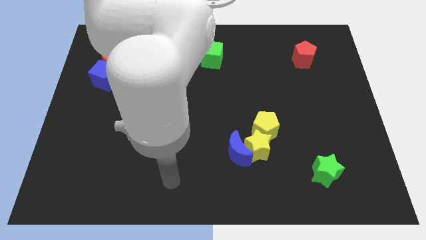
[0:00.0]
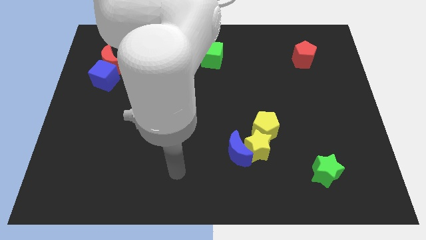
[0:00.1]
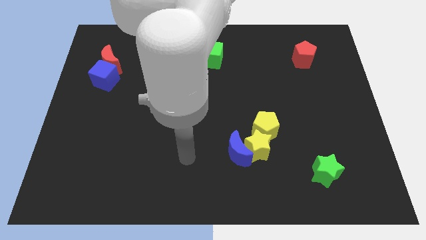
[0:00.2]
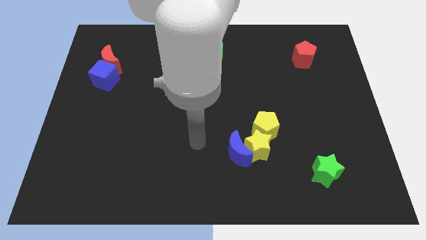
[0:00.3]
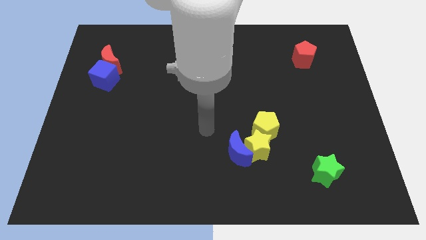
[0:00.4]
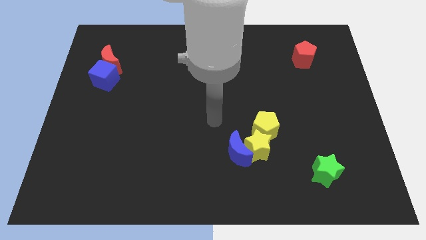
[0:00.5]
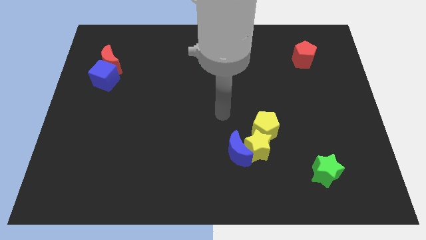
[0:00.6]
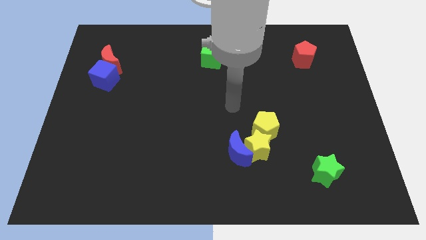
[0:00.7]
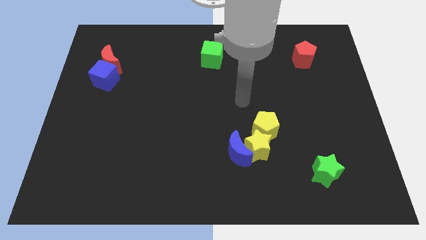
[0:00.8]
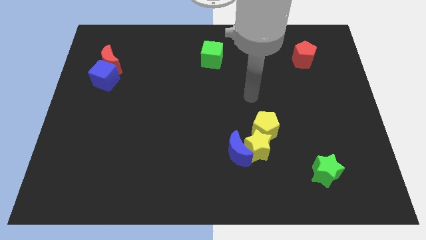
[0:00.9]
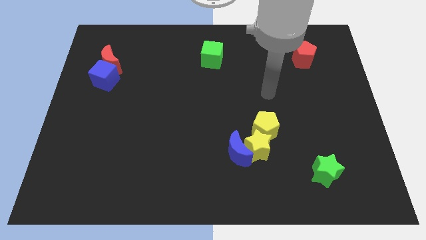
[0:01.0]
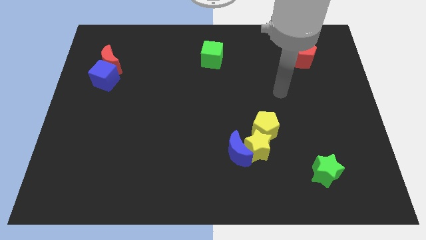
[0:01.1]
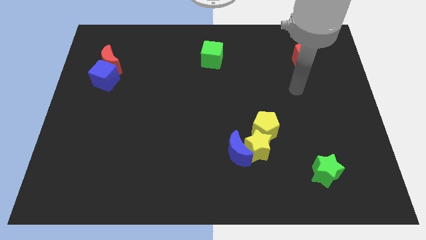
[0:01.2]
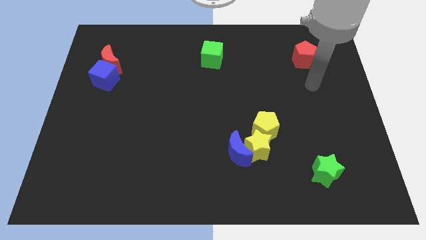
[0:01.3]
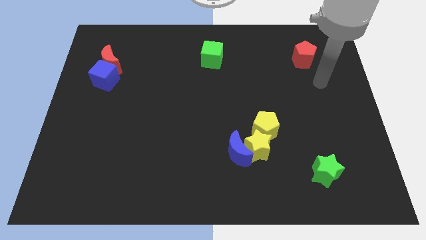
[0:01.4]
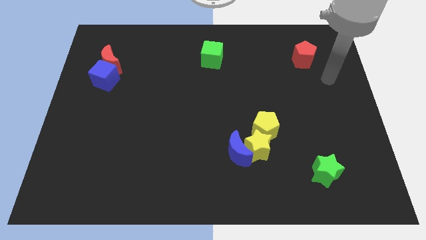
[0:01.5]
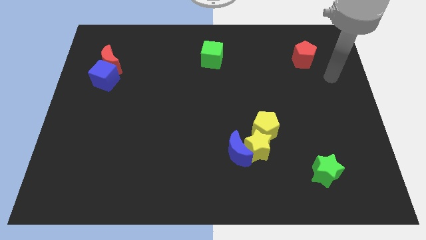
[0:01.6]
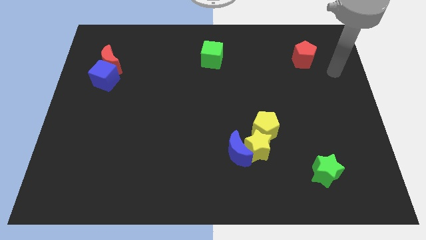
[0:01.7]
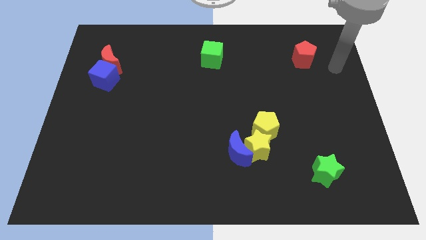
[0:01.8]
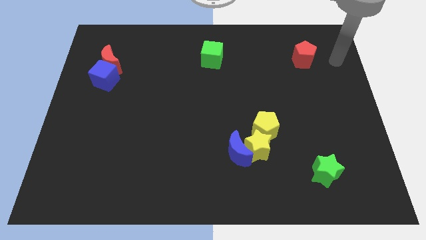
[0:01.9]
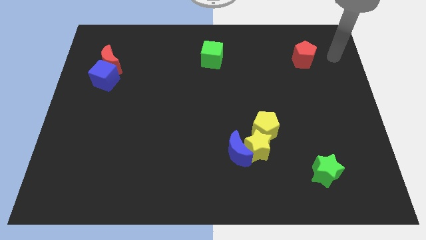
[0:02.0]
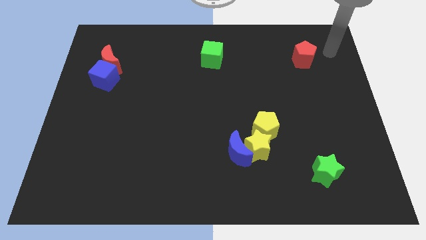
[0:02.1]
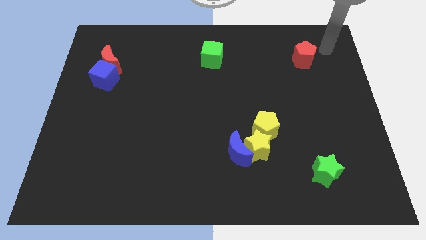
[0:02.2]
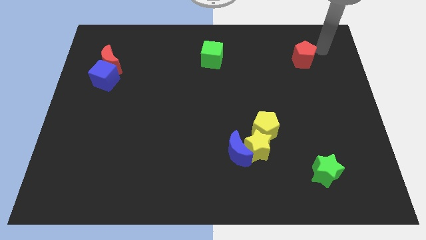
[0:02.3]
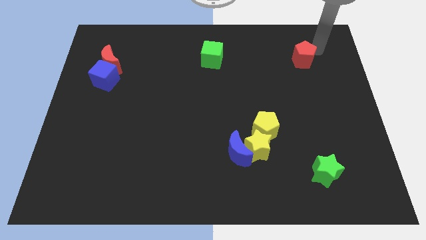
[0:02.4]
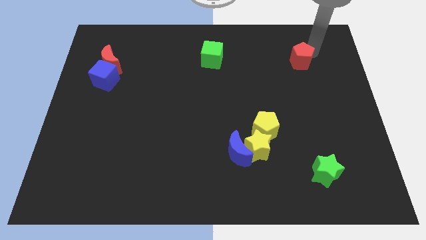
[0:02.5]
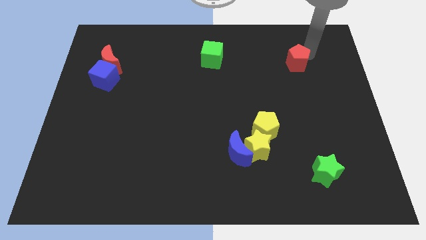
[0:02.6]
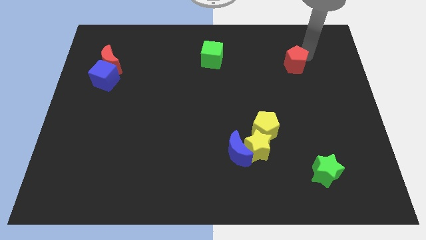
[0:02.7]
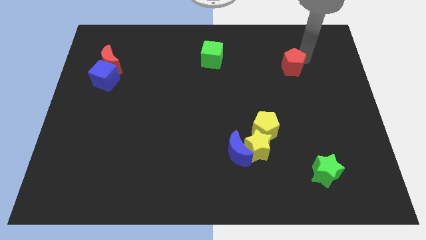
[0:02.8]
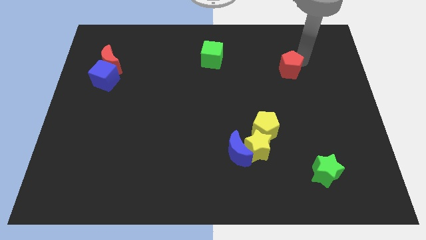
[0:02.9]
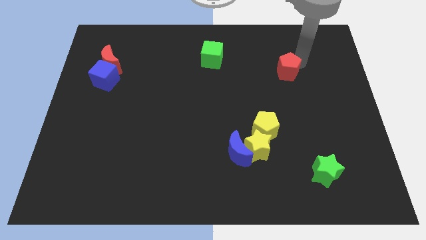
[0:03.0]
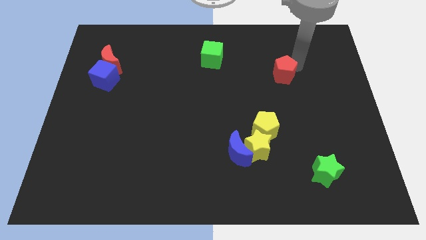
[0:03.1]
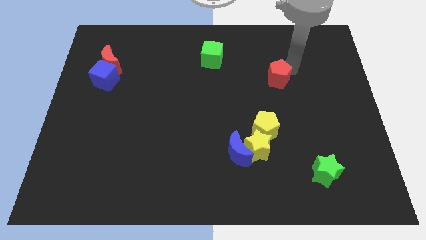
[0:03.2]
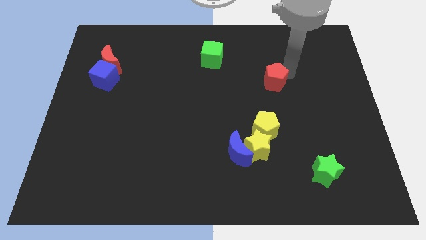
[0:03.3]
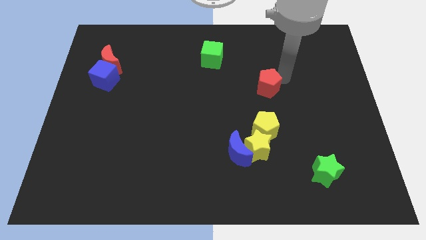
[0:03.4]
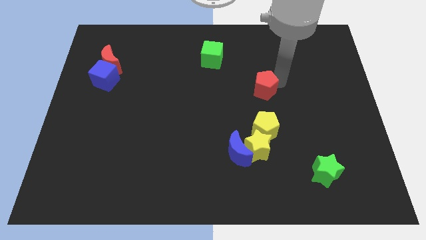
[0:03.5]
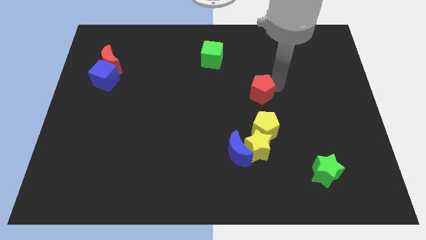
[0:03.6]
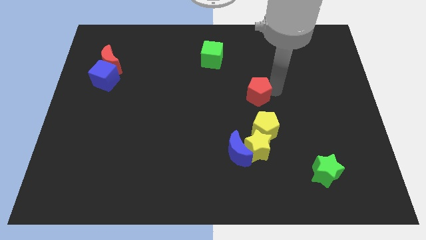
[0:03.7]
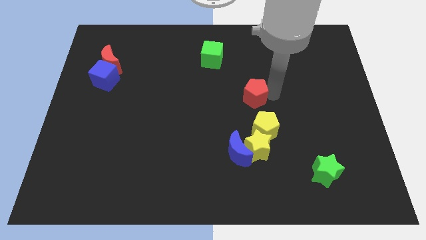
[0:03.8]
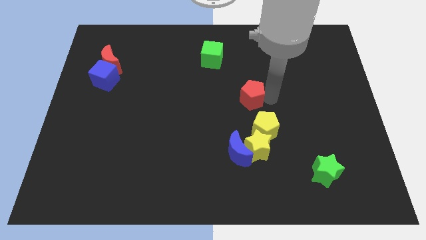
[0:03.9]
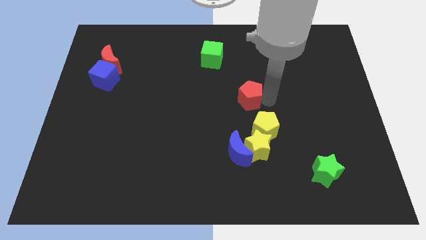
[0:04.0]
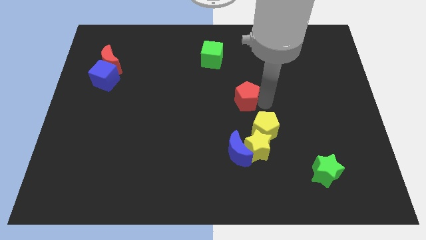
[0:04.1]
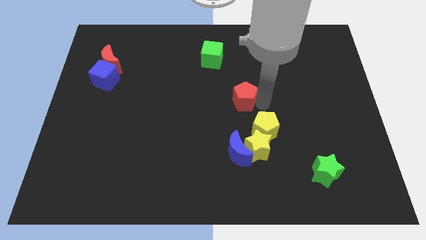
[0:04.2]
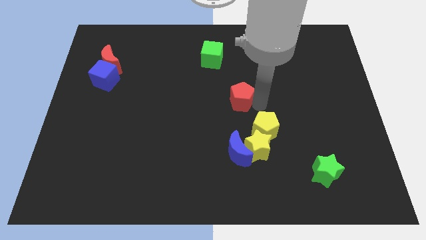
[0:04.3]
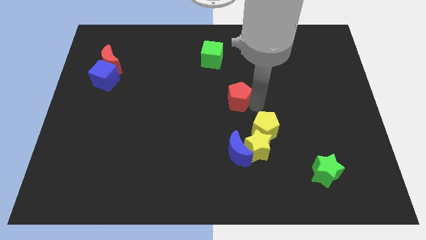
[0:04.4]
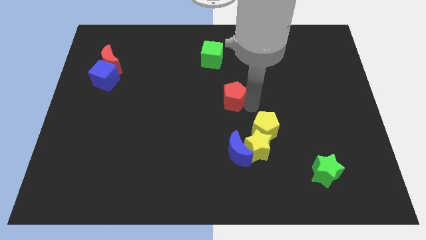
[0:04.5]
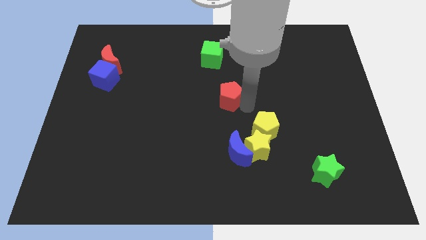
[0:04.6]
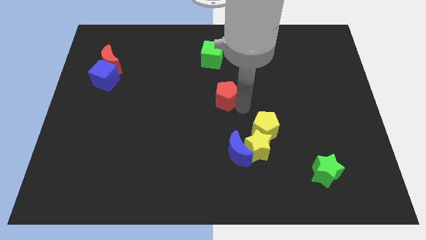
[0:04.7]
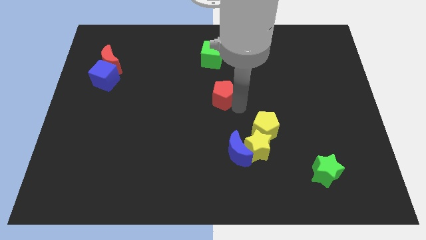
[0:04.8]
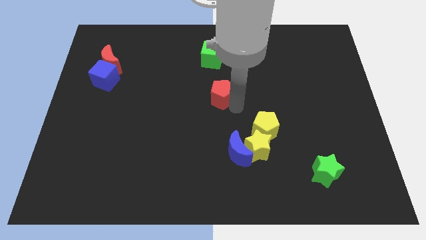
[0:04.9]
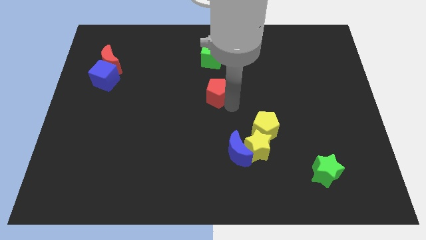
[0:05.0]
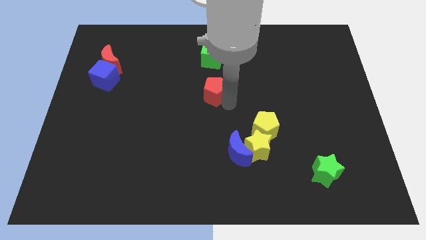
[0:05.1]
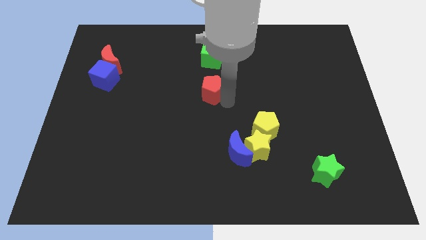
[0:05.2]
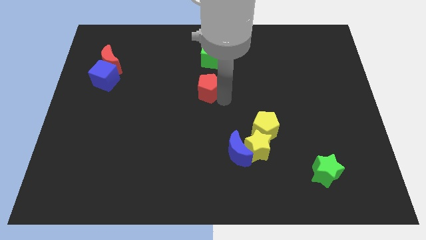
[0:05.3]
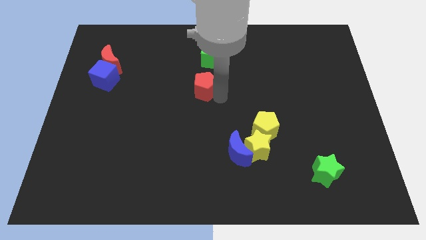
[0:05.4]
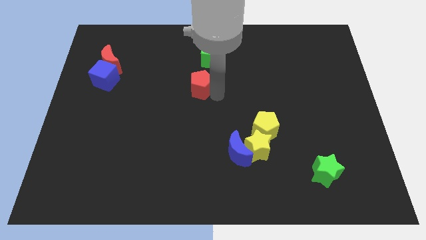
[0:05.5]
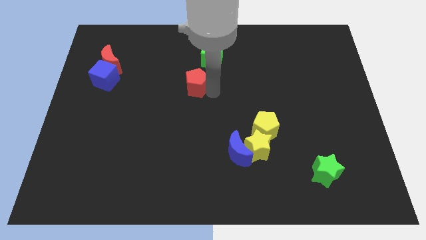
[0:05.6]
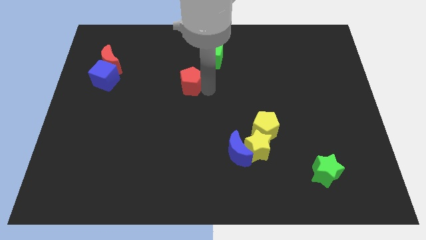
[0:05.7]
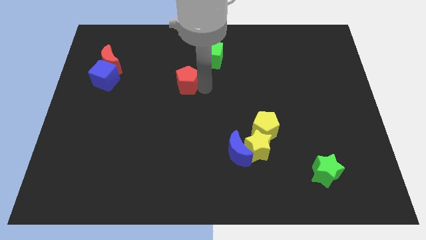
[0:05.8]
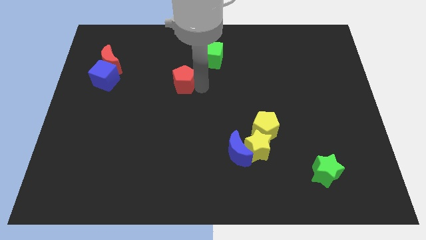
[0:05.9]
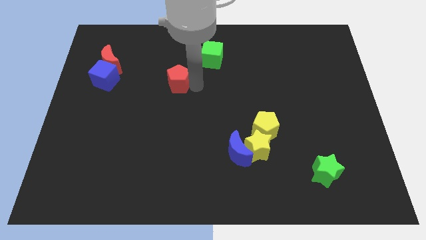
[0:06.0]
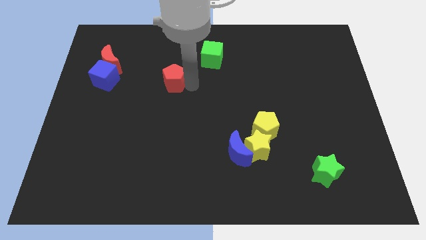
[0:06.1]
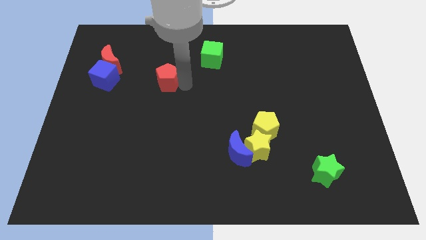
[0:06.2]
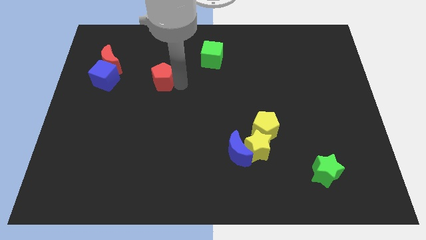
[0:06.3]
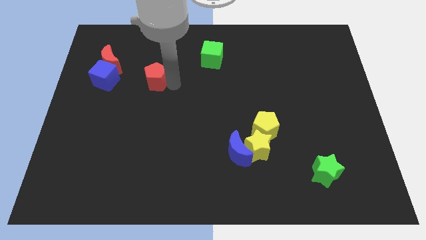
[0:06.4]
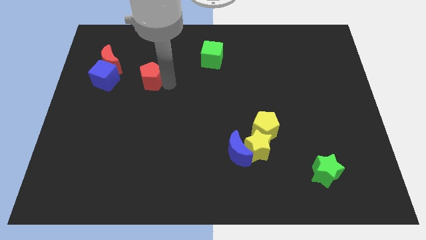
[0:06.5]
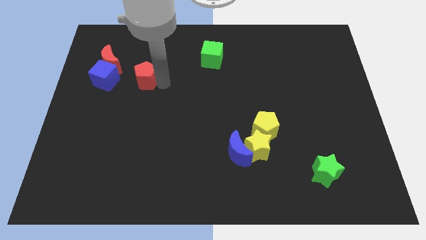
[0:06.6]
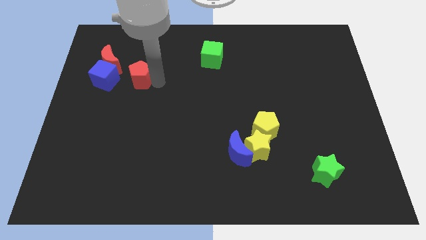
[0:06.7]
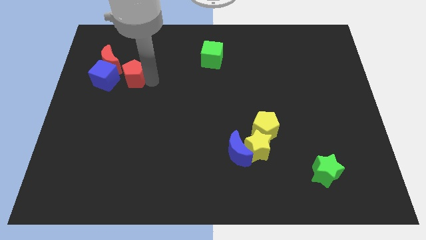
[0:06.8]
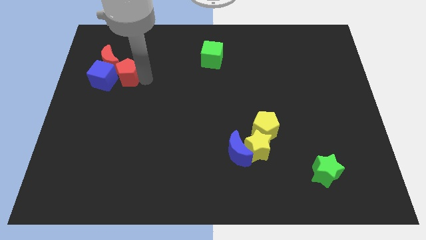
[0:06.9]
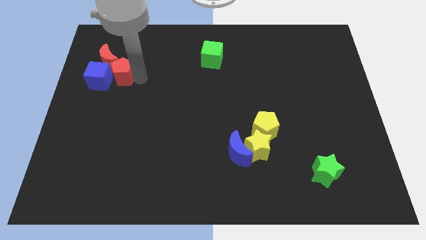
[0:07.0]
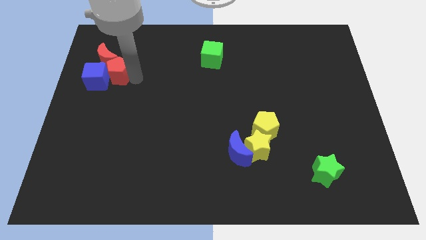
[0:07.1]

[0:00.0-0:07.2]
move the red pentagon towards the blue cube

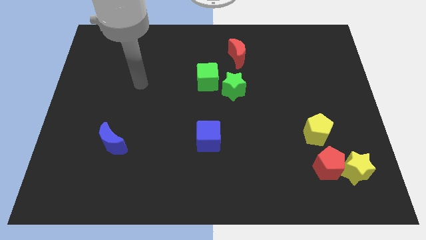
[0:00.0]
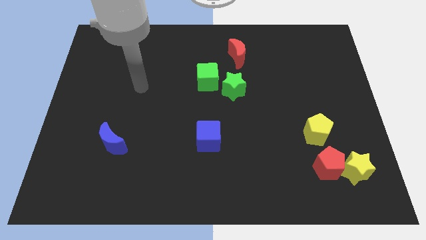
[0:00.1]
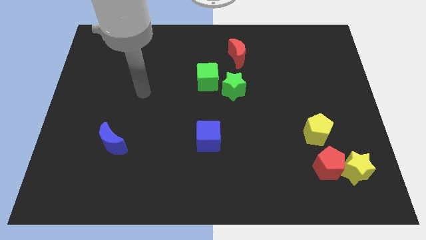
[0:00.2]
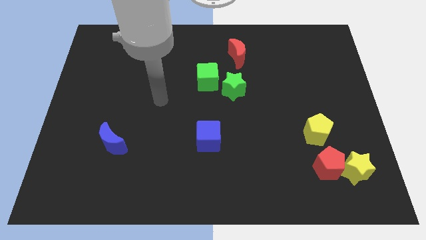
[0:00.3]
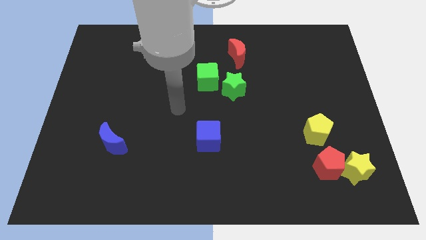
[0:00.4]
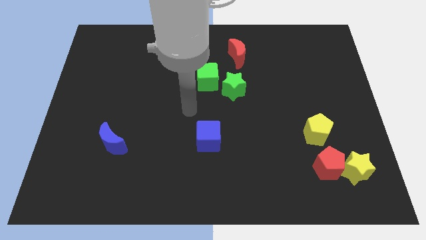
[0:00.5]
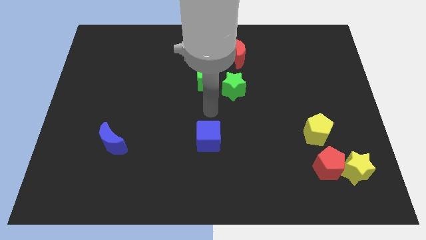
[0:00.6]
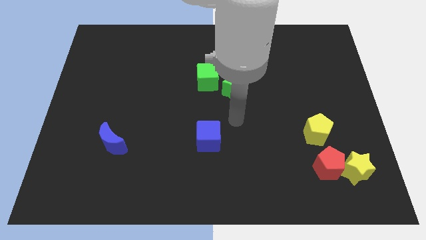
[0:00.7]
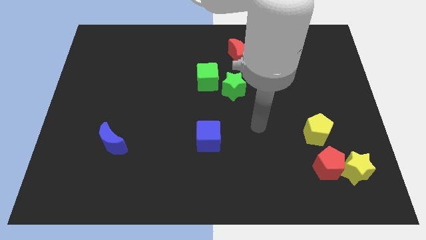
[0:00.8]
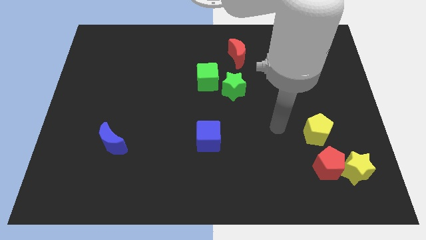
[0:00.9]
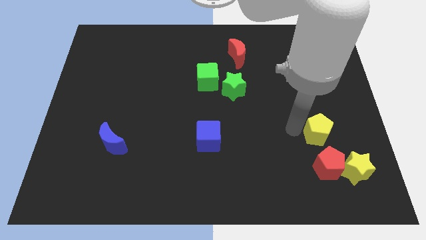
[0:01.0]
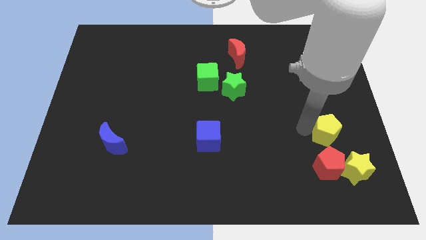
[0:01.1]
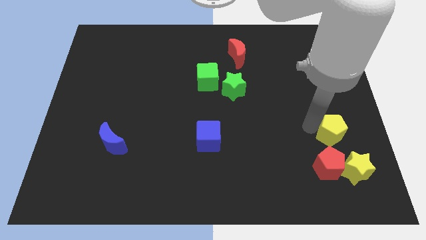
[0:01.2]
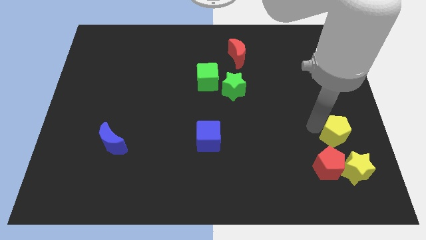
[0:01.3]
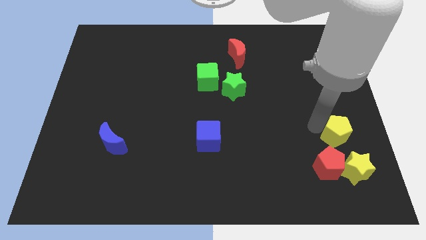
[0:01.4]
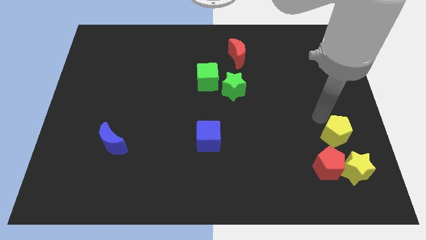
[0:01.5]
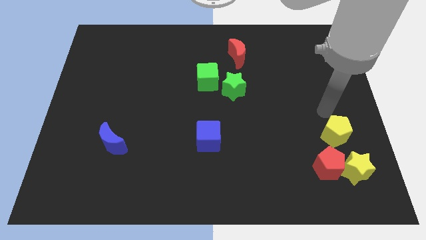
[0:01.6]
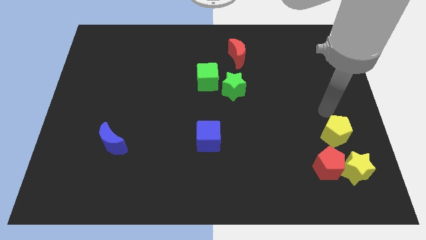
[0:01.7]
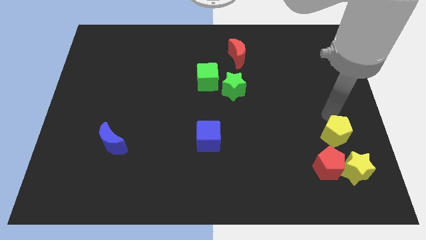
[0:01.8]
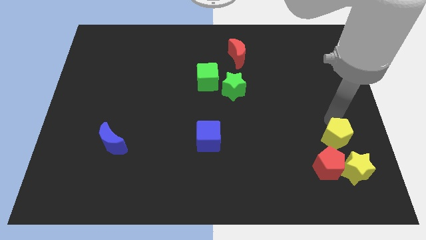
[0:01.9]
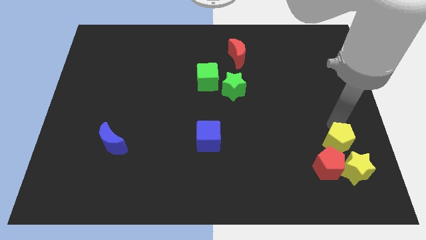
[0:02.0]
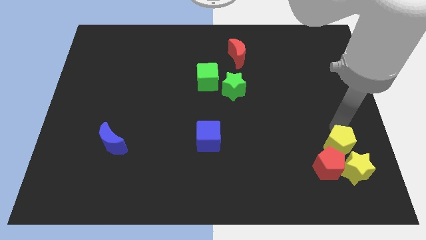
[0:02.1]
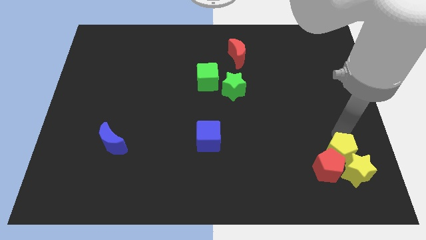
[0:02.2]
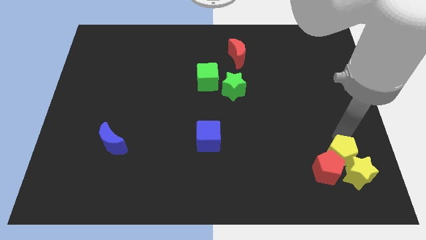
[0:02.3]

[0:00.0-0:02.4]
push the yellow pentagon close to the yellow star
